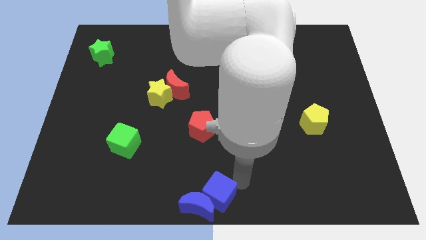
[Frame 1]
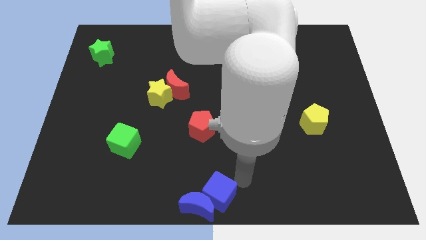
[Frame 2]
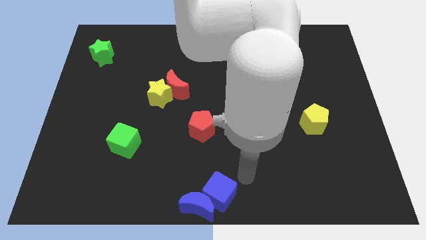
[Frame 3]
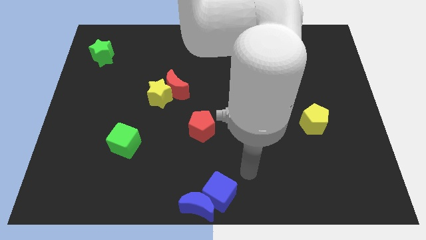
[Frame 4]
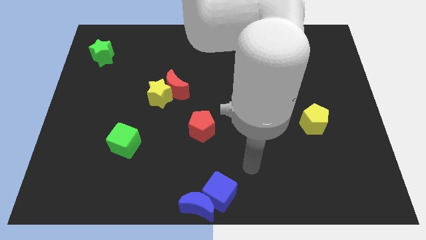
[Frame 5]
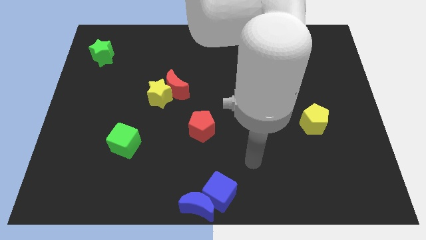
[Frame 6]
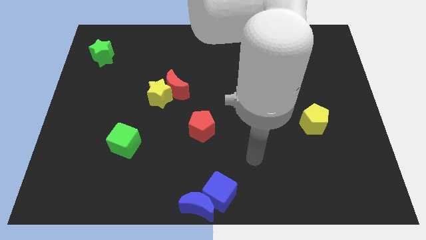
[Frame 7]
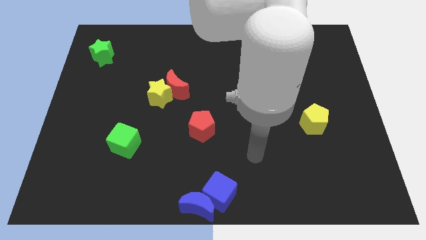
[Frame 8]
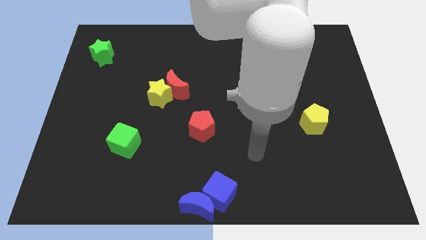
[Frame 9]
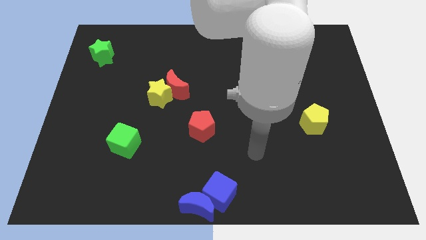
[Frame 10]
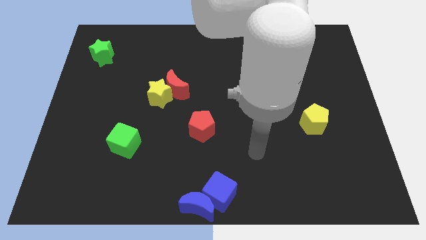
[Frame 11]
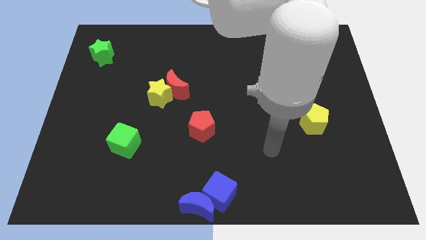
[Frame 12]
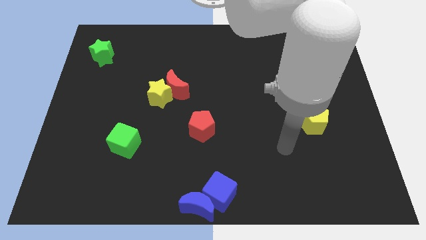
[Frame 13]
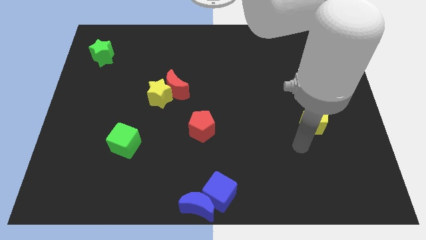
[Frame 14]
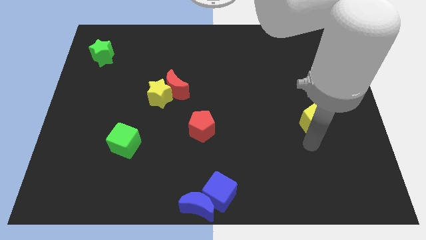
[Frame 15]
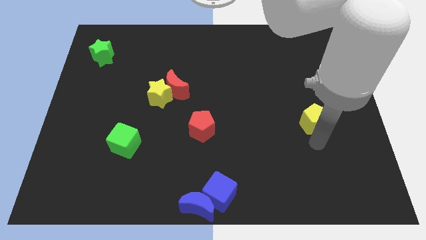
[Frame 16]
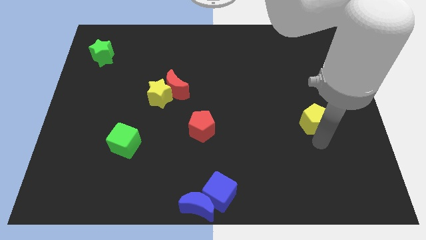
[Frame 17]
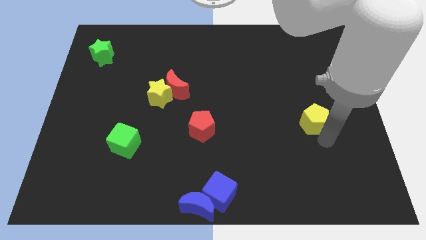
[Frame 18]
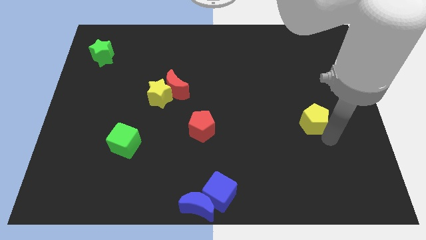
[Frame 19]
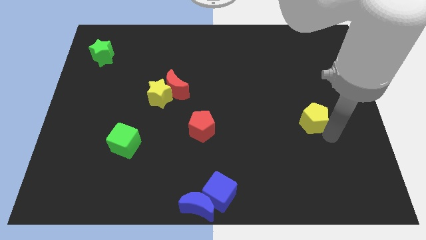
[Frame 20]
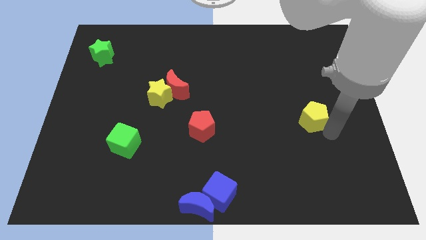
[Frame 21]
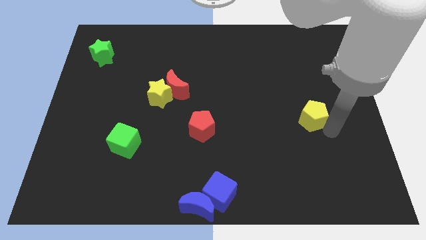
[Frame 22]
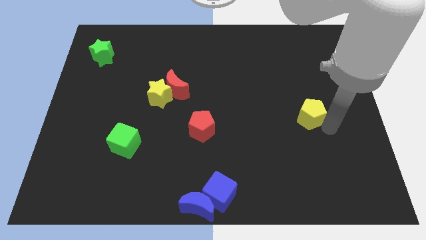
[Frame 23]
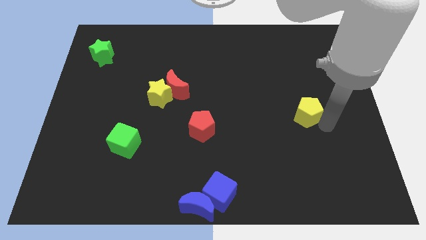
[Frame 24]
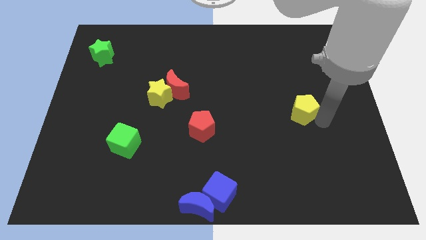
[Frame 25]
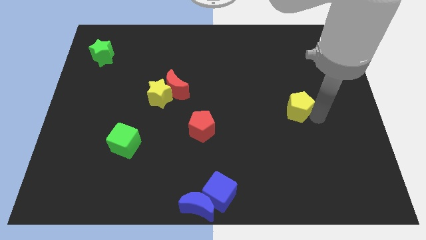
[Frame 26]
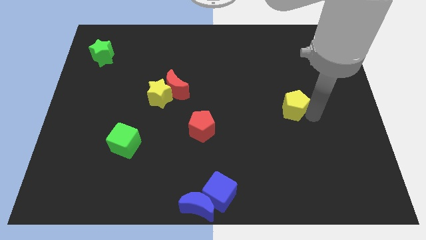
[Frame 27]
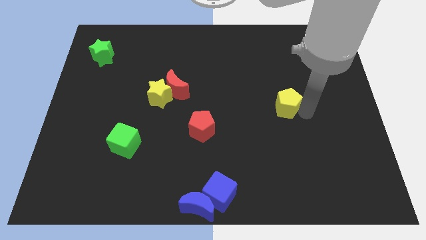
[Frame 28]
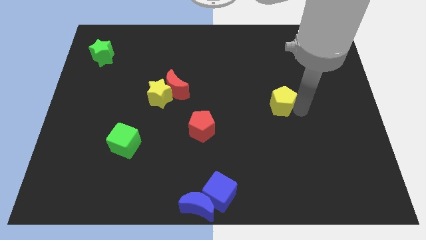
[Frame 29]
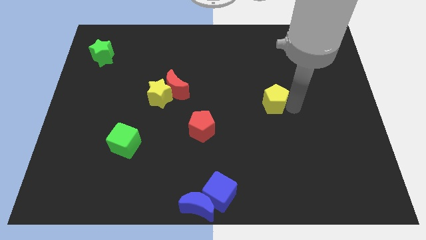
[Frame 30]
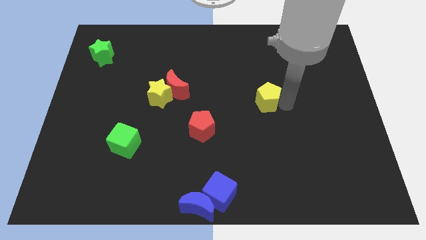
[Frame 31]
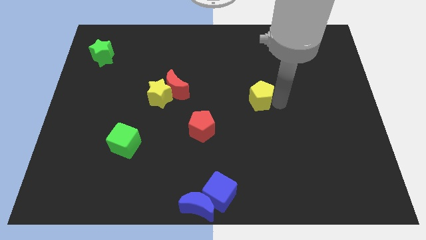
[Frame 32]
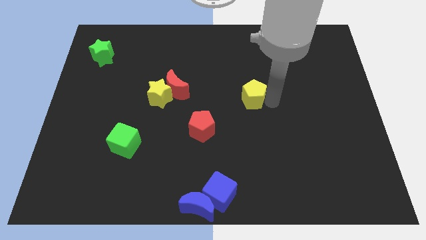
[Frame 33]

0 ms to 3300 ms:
place the yellow pentagon diagonally to red pentagon

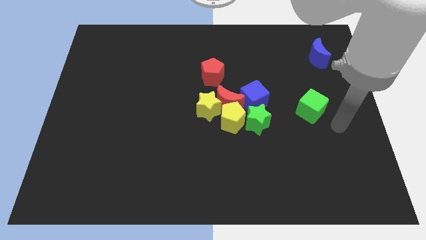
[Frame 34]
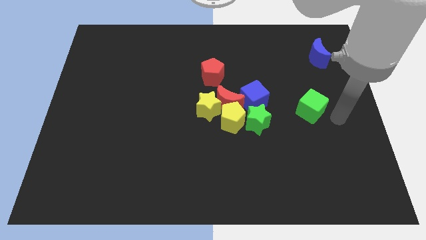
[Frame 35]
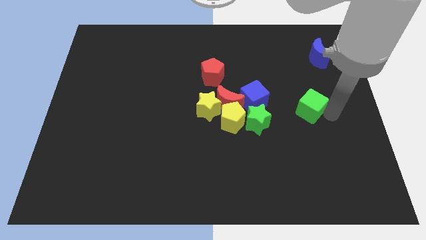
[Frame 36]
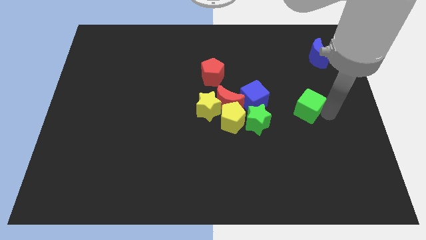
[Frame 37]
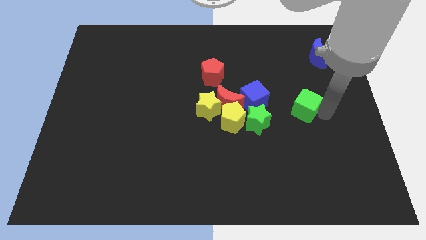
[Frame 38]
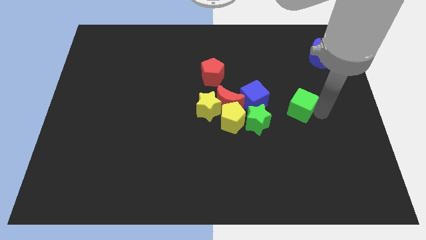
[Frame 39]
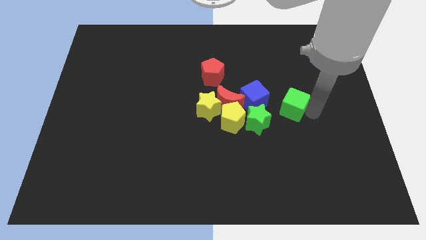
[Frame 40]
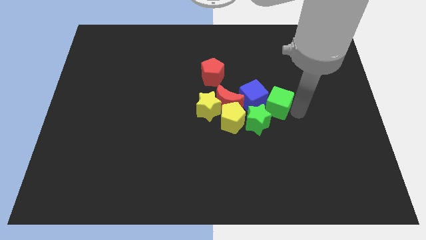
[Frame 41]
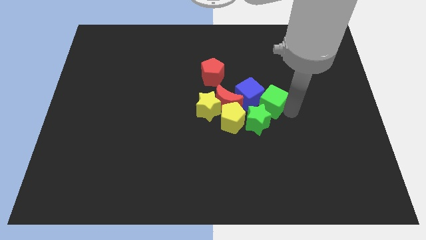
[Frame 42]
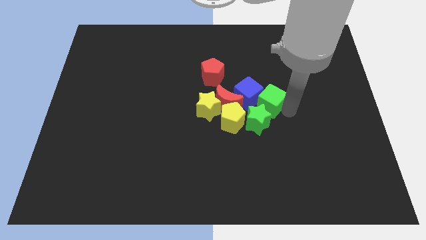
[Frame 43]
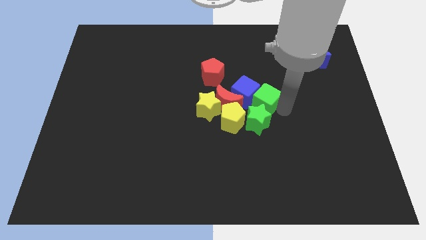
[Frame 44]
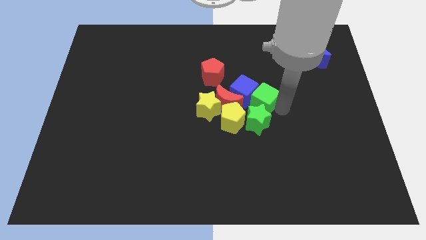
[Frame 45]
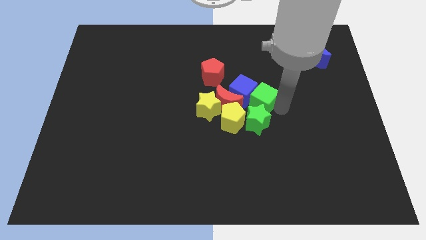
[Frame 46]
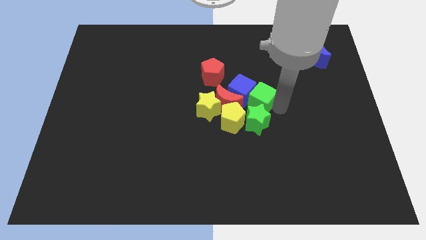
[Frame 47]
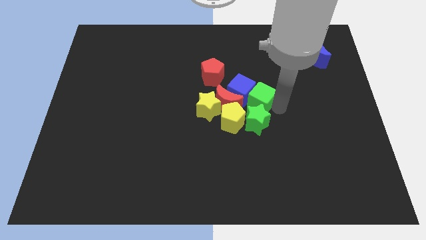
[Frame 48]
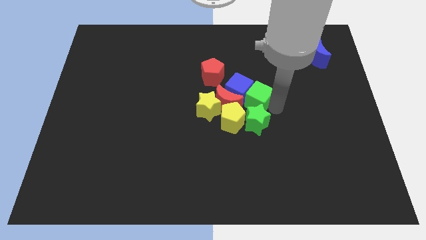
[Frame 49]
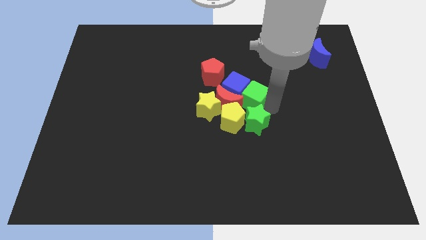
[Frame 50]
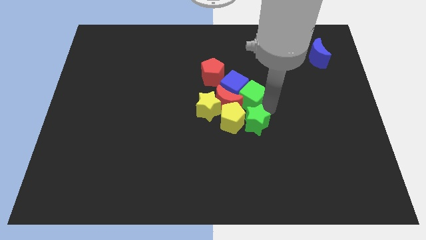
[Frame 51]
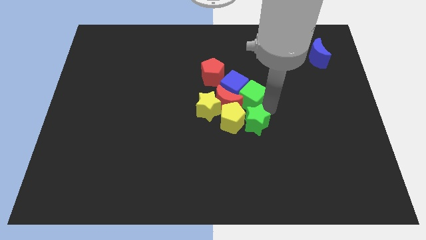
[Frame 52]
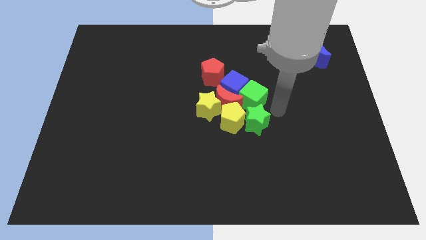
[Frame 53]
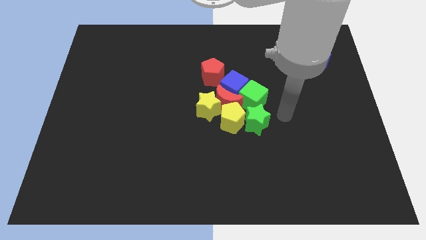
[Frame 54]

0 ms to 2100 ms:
put the two cubes together

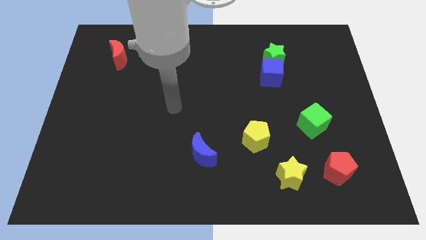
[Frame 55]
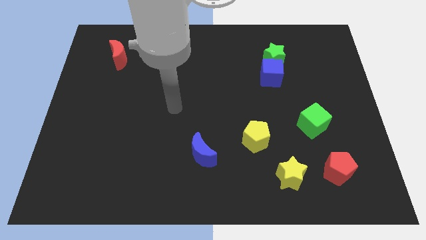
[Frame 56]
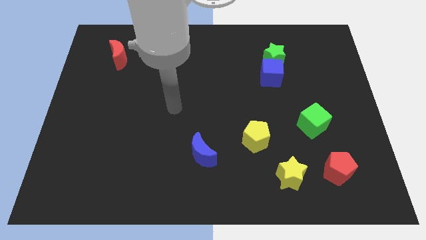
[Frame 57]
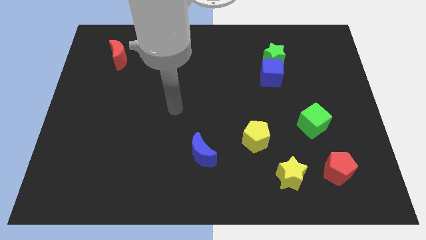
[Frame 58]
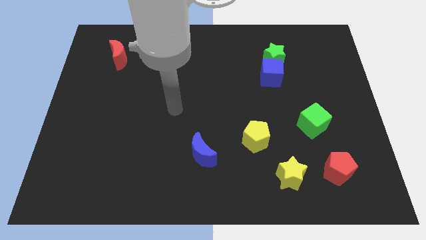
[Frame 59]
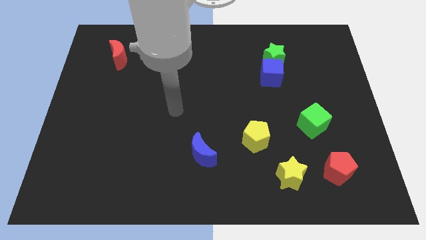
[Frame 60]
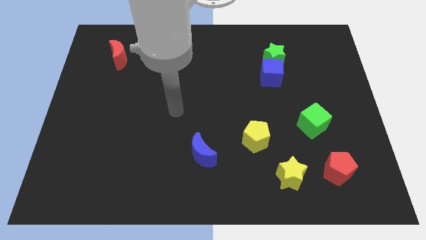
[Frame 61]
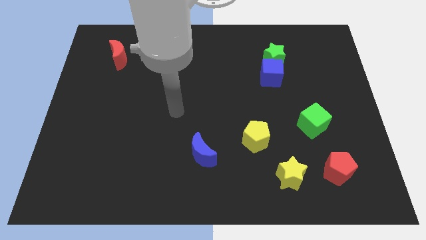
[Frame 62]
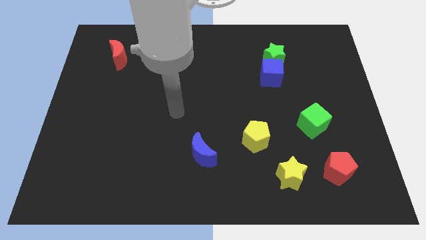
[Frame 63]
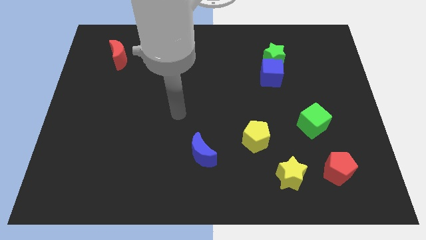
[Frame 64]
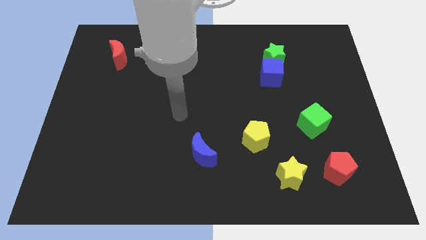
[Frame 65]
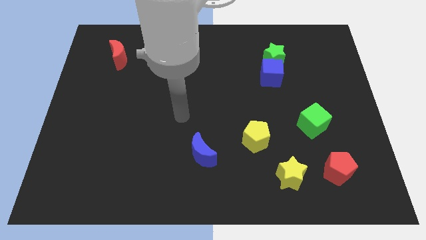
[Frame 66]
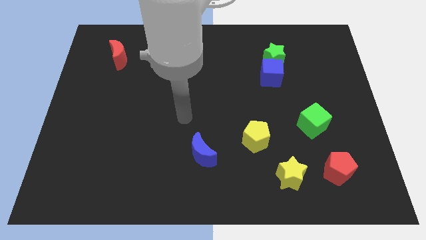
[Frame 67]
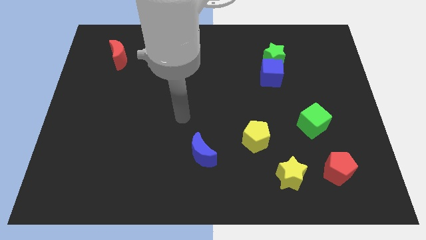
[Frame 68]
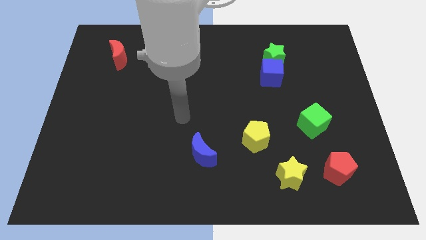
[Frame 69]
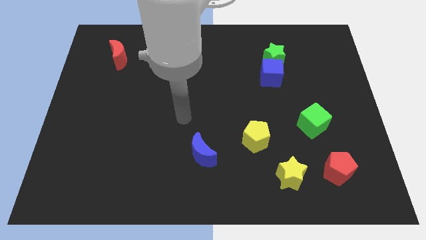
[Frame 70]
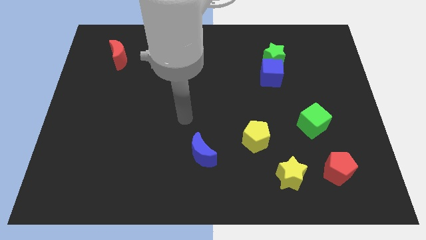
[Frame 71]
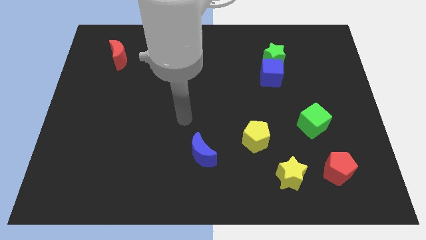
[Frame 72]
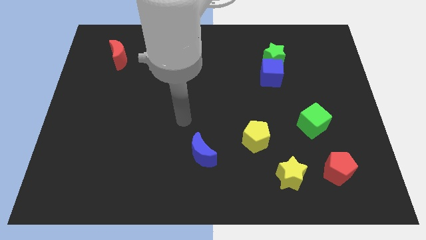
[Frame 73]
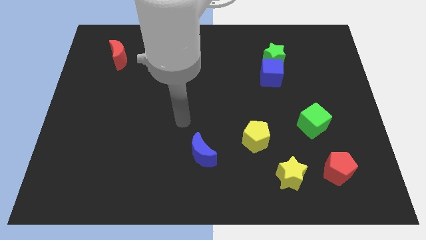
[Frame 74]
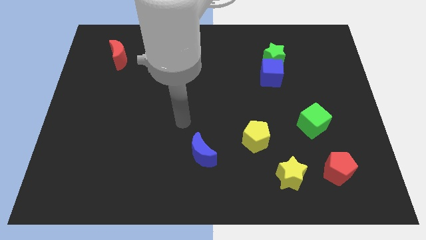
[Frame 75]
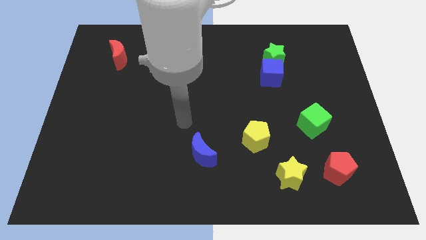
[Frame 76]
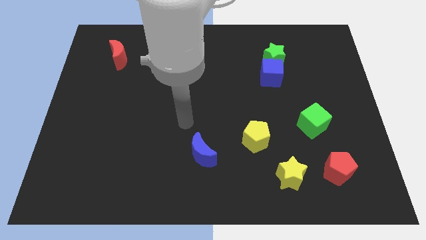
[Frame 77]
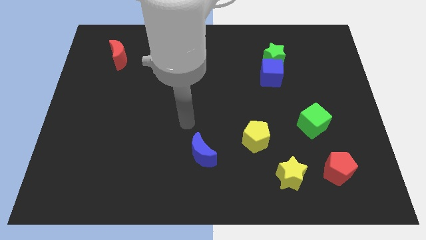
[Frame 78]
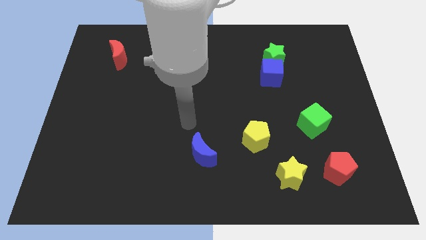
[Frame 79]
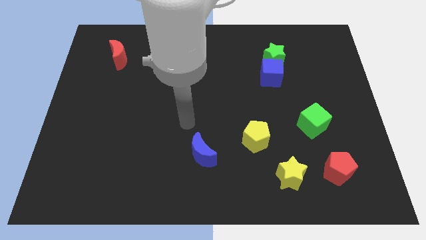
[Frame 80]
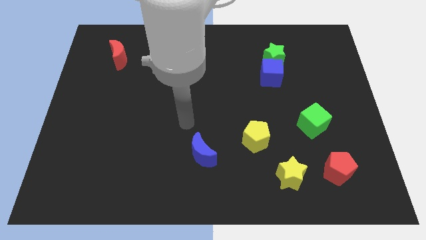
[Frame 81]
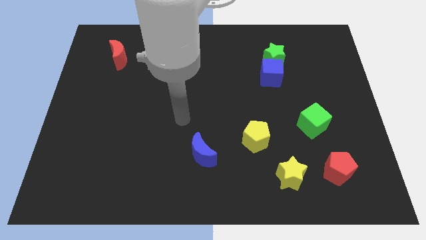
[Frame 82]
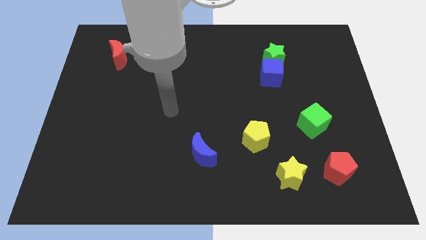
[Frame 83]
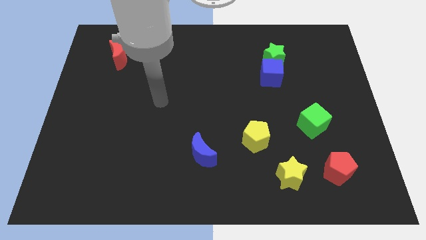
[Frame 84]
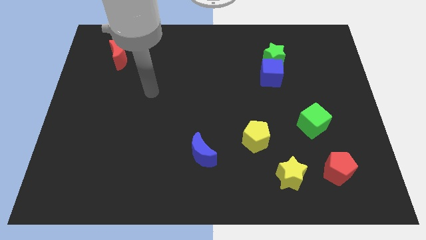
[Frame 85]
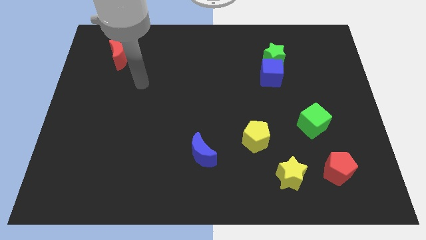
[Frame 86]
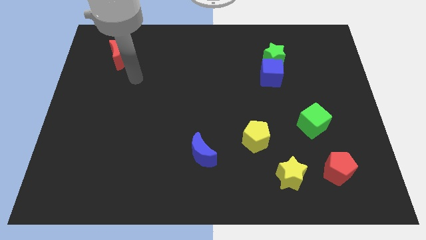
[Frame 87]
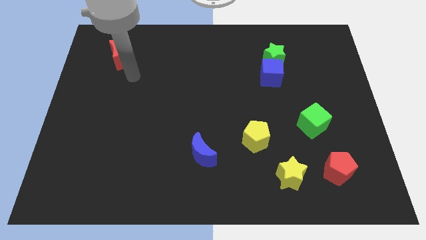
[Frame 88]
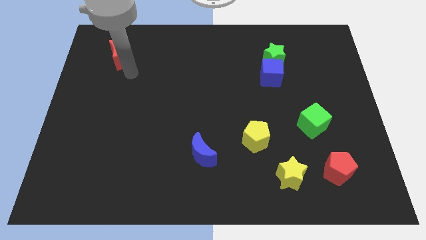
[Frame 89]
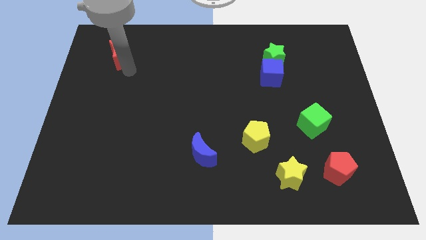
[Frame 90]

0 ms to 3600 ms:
go near the red moon
